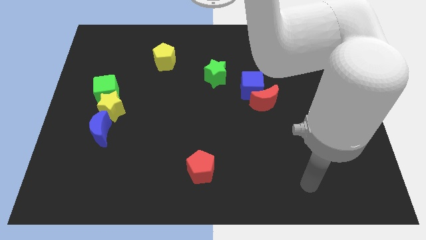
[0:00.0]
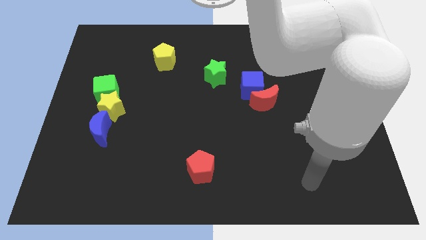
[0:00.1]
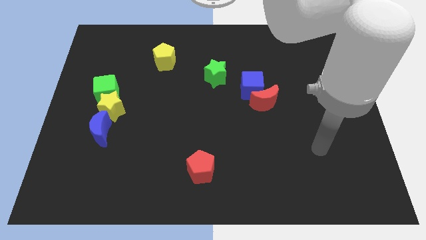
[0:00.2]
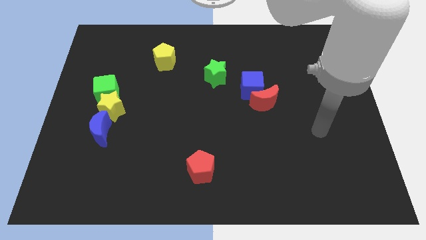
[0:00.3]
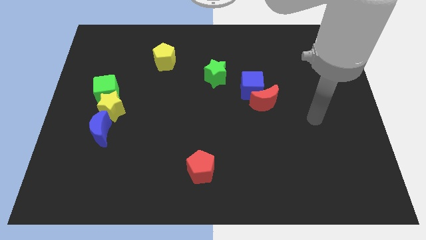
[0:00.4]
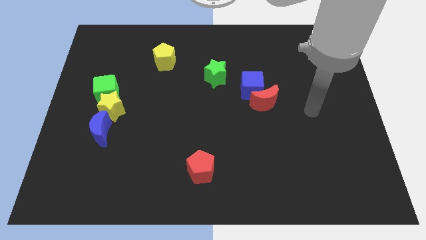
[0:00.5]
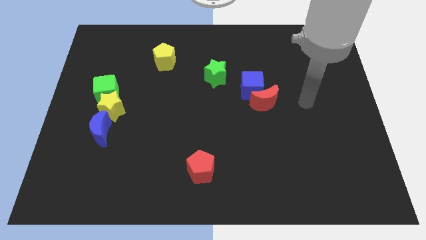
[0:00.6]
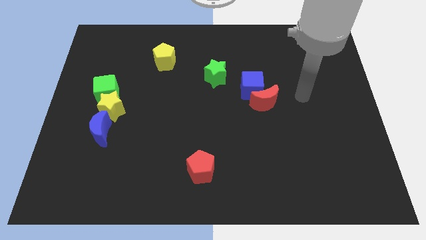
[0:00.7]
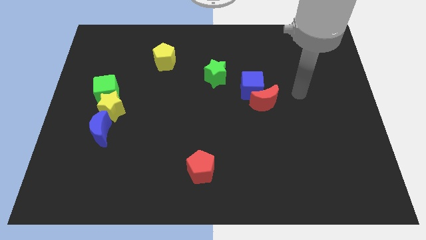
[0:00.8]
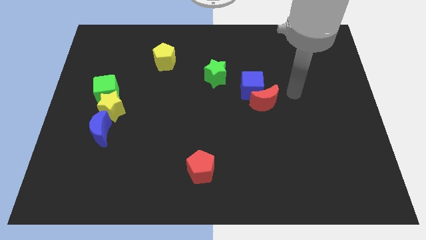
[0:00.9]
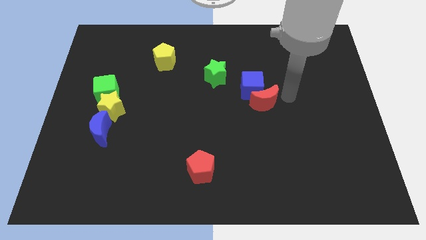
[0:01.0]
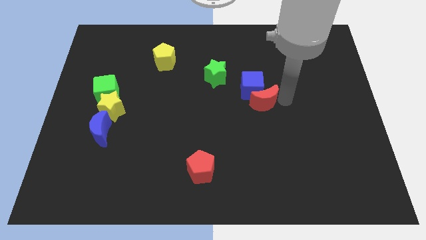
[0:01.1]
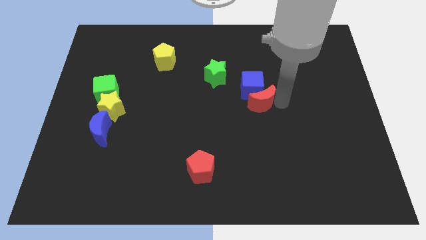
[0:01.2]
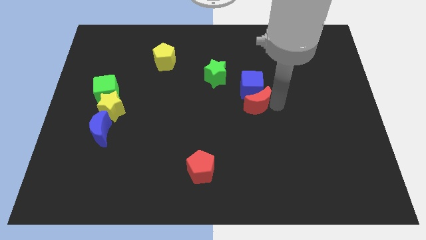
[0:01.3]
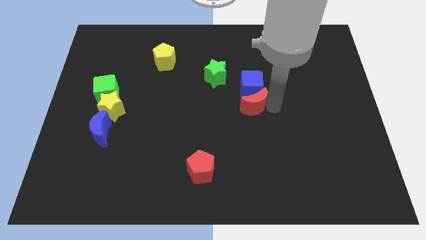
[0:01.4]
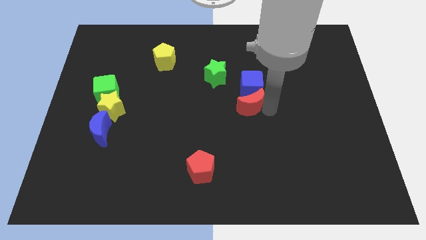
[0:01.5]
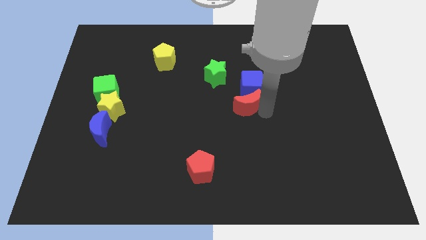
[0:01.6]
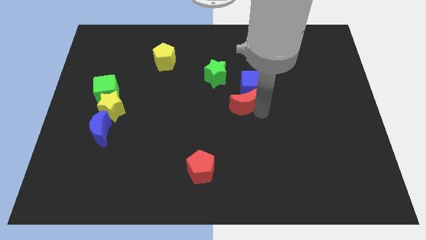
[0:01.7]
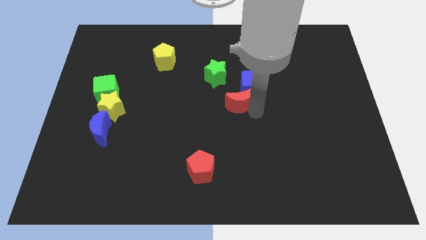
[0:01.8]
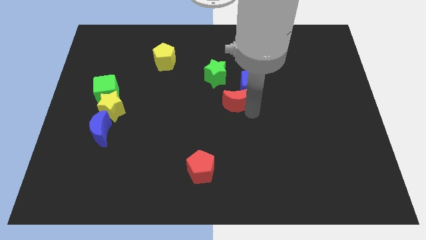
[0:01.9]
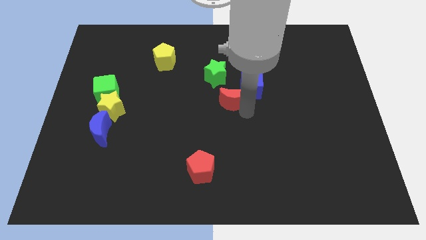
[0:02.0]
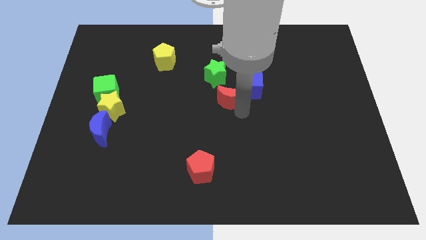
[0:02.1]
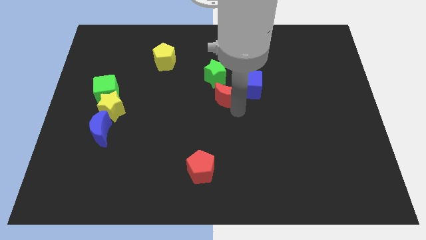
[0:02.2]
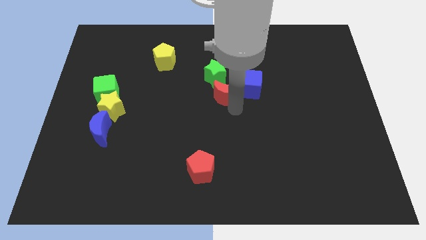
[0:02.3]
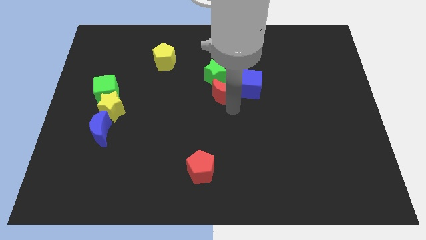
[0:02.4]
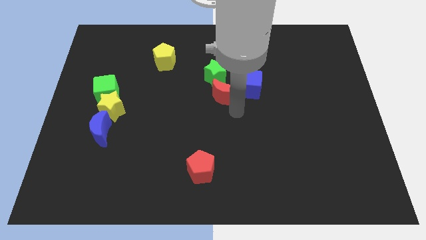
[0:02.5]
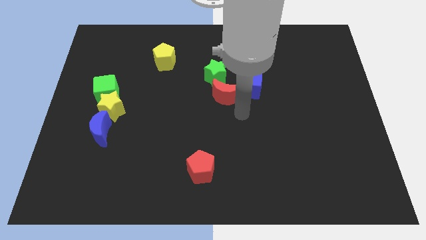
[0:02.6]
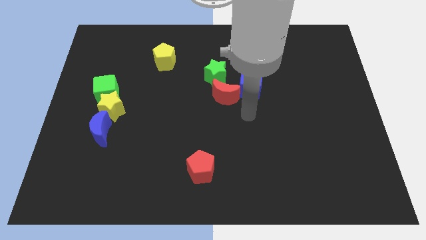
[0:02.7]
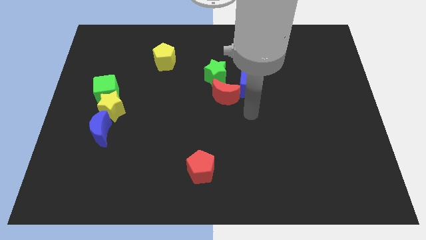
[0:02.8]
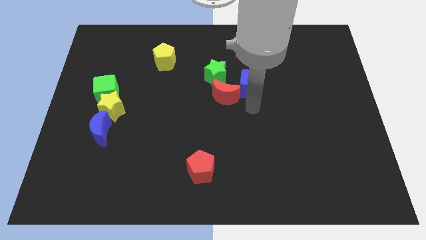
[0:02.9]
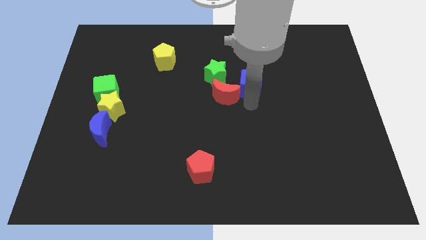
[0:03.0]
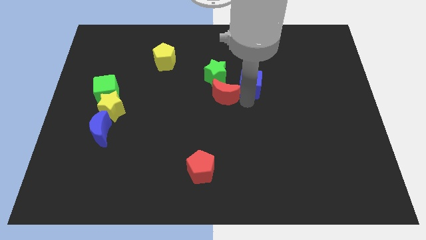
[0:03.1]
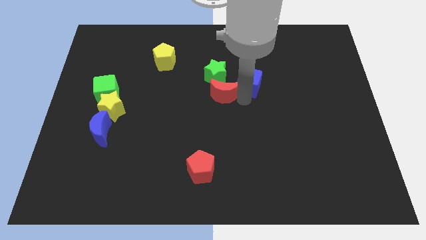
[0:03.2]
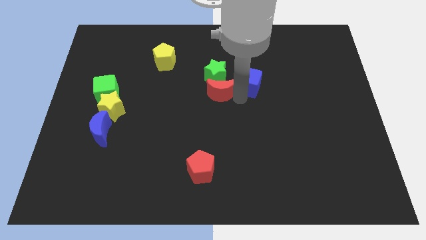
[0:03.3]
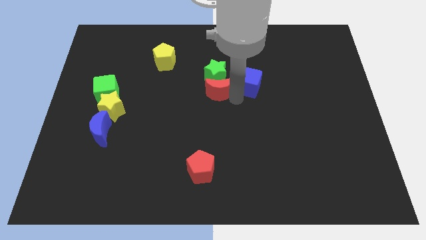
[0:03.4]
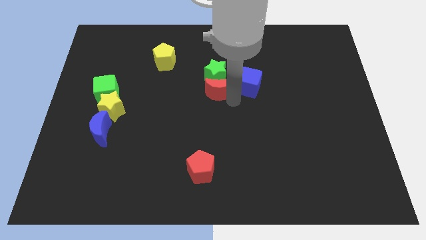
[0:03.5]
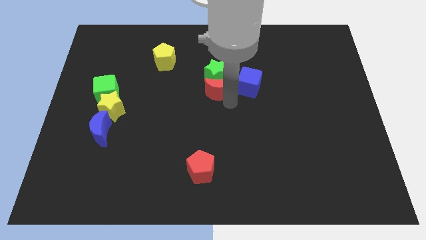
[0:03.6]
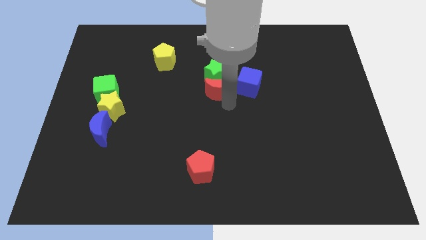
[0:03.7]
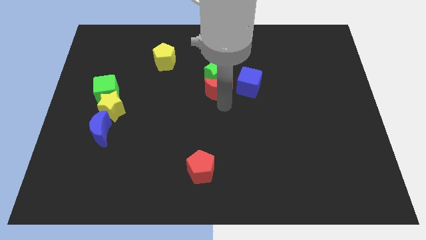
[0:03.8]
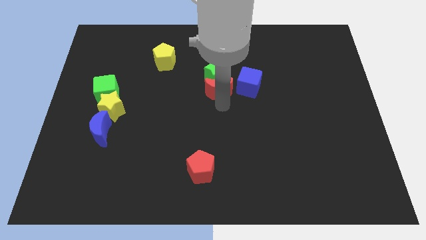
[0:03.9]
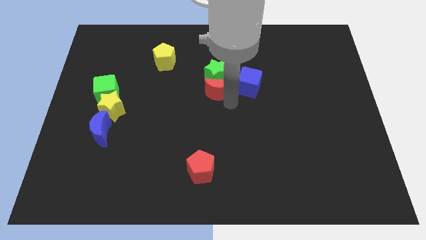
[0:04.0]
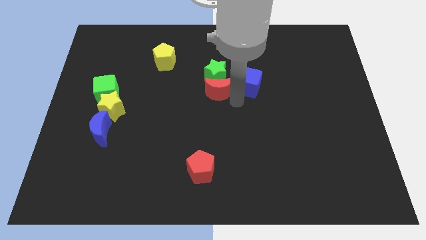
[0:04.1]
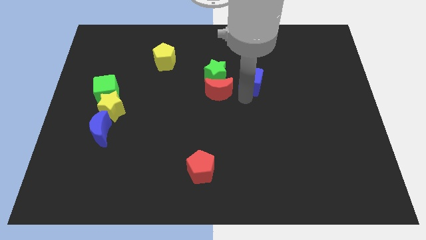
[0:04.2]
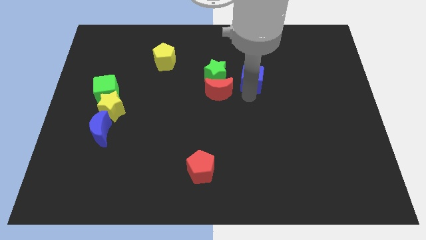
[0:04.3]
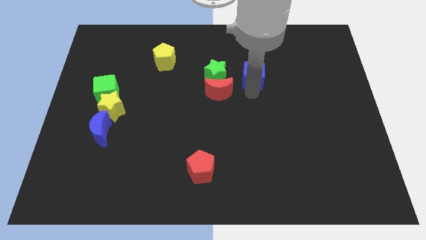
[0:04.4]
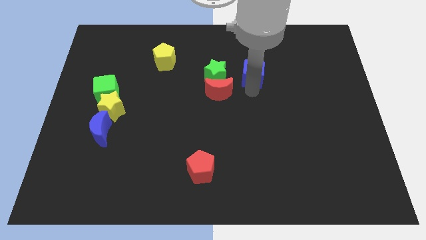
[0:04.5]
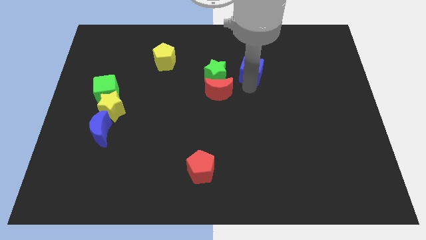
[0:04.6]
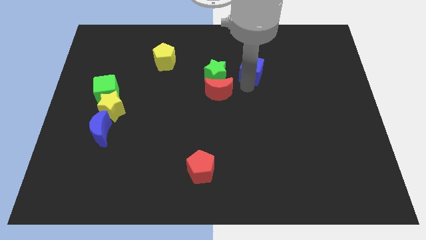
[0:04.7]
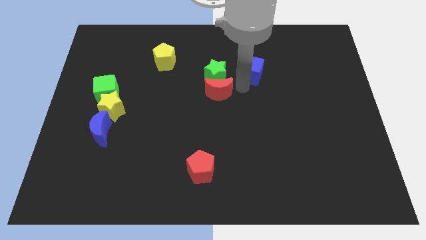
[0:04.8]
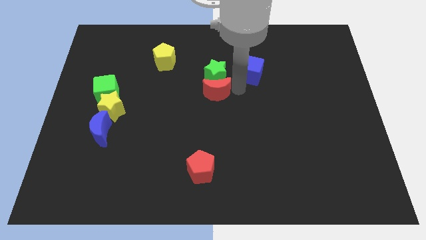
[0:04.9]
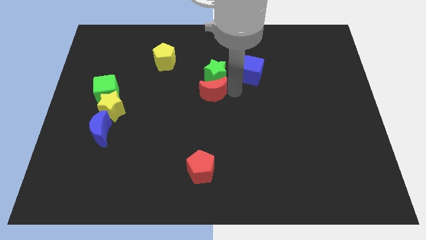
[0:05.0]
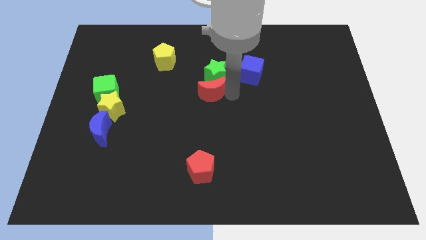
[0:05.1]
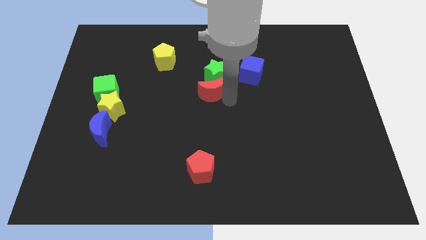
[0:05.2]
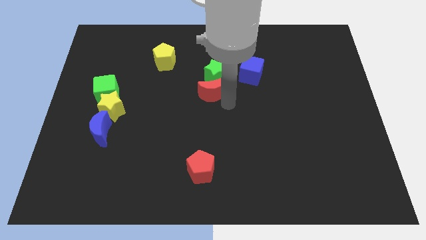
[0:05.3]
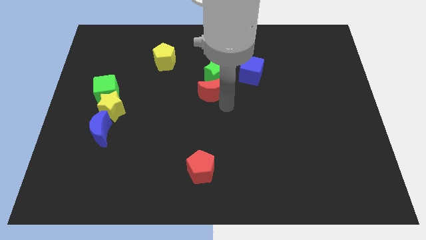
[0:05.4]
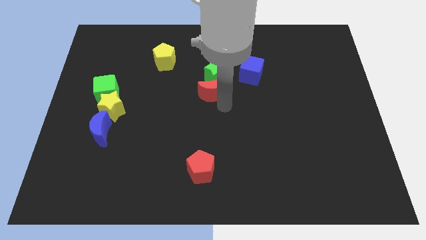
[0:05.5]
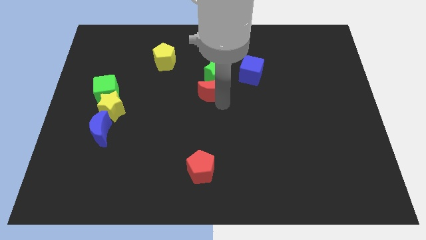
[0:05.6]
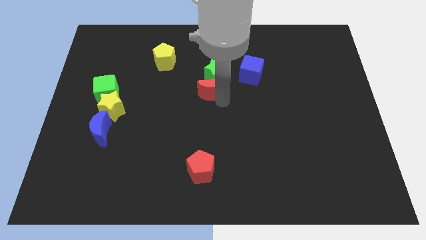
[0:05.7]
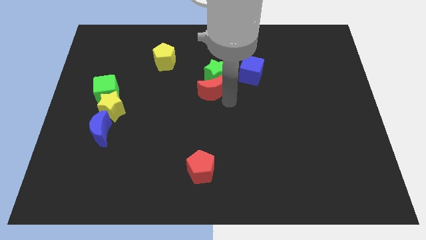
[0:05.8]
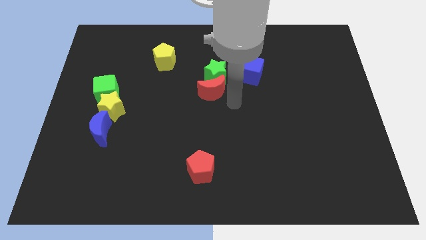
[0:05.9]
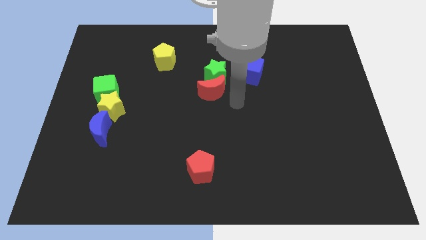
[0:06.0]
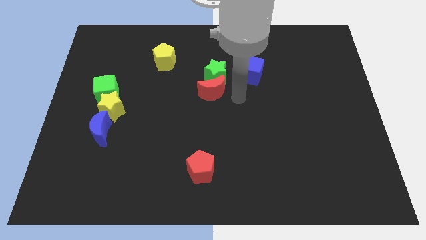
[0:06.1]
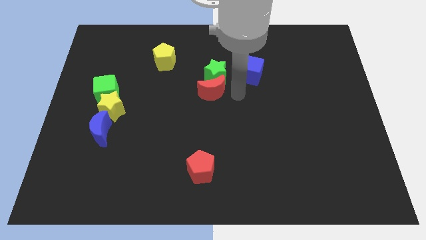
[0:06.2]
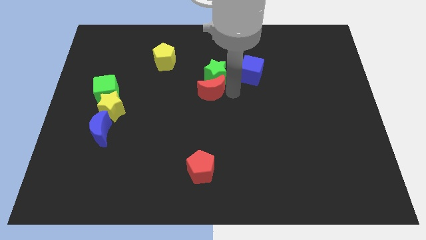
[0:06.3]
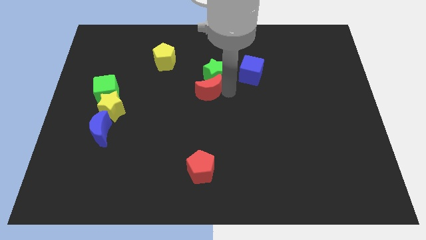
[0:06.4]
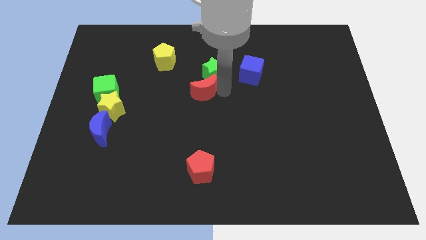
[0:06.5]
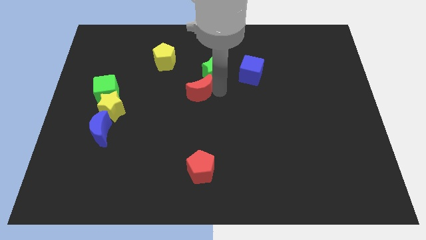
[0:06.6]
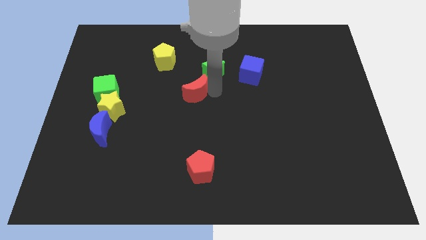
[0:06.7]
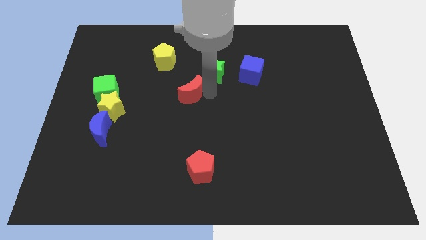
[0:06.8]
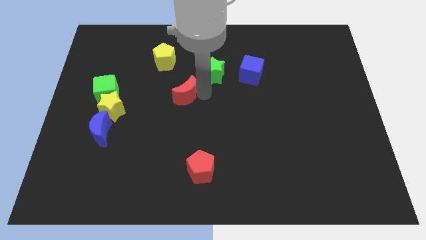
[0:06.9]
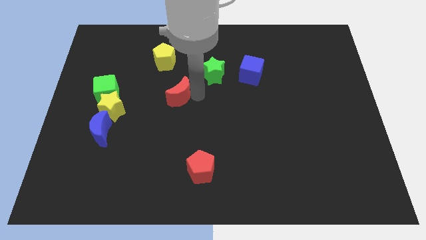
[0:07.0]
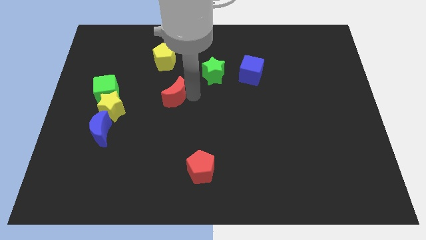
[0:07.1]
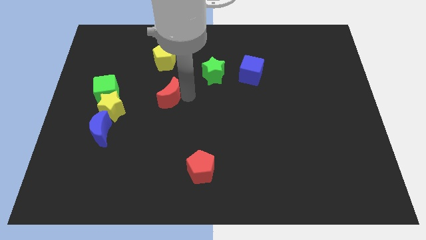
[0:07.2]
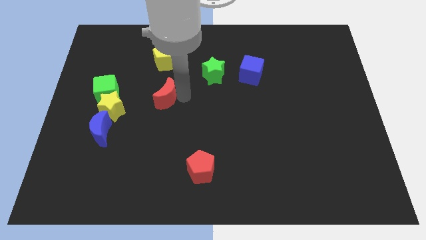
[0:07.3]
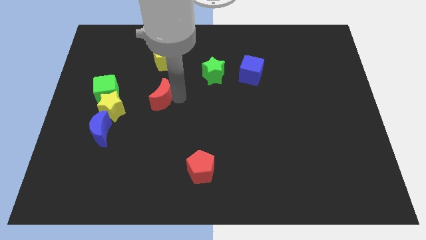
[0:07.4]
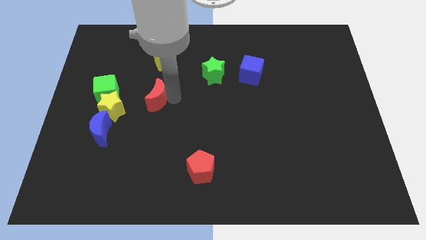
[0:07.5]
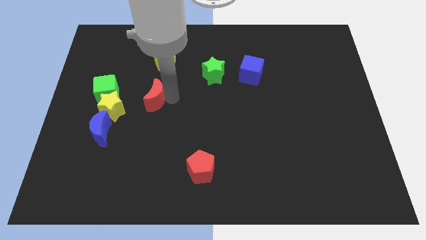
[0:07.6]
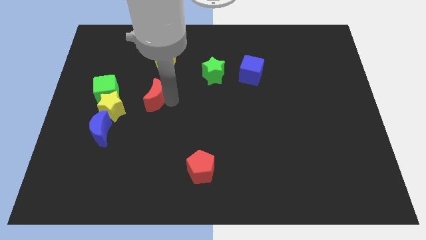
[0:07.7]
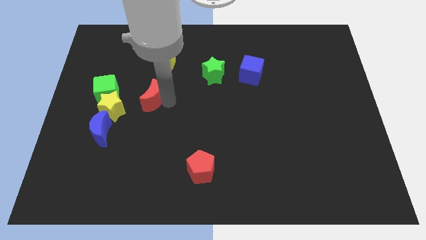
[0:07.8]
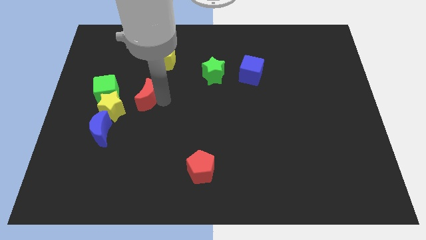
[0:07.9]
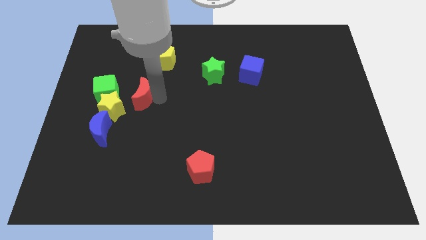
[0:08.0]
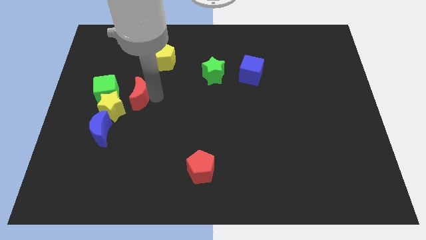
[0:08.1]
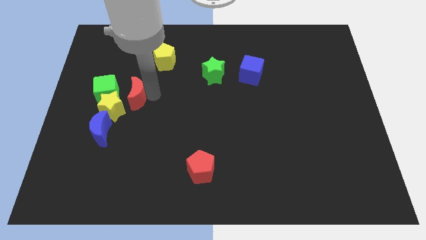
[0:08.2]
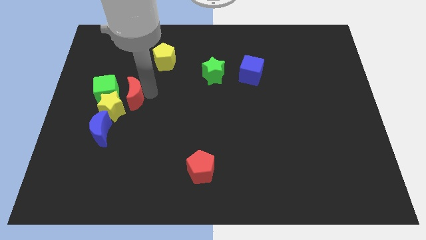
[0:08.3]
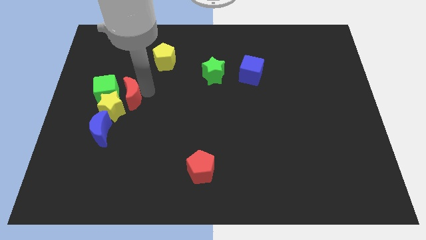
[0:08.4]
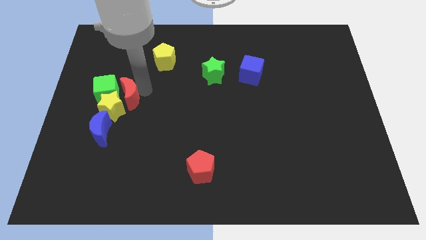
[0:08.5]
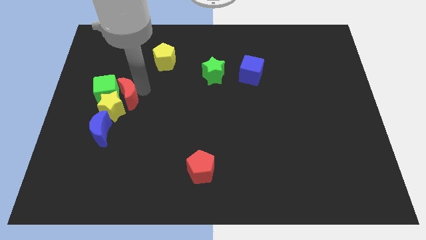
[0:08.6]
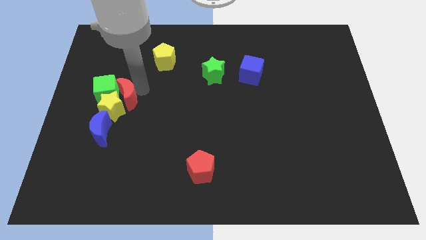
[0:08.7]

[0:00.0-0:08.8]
put the red moon next to the green cube
